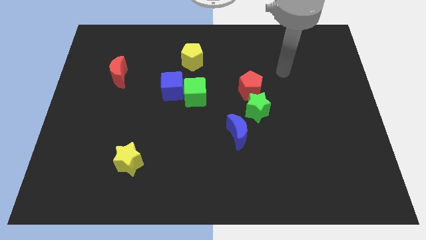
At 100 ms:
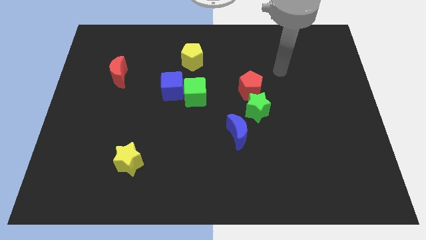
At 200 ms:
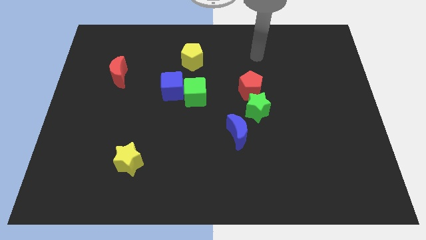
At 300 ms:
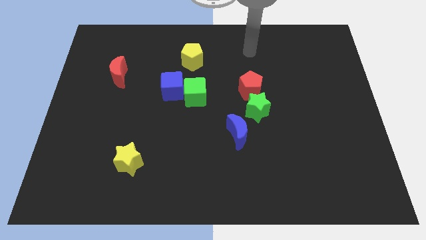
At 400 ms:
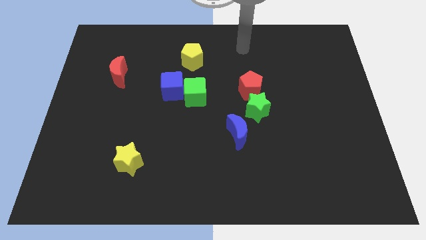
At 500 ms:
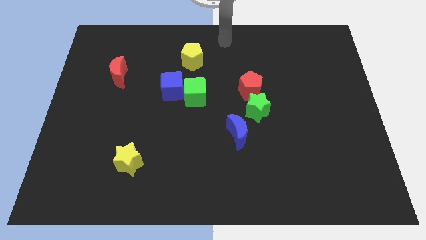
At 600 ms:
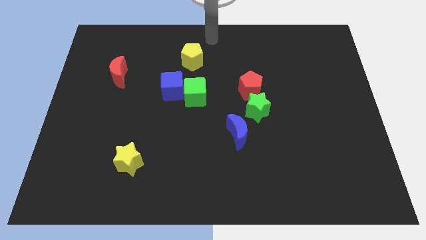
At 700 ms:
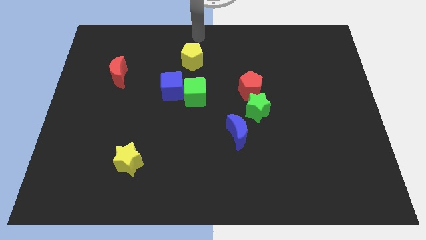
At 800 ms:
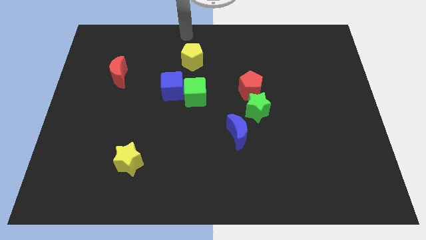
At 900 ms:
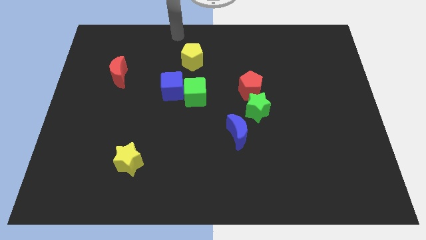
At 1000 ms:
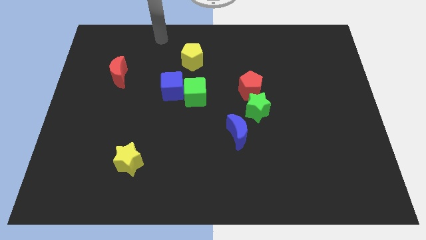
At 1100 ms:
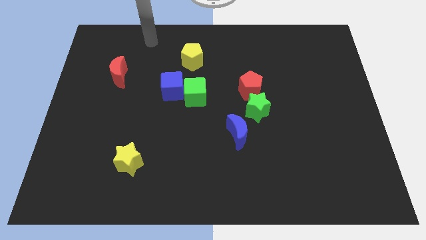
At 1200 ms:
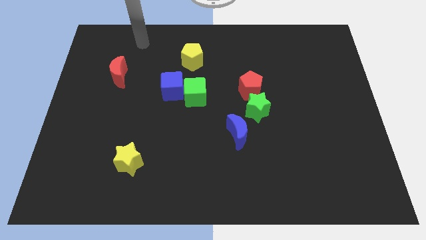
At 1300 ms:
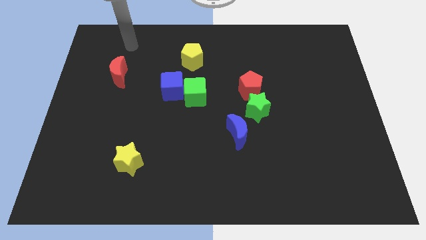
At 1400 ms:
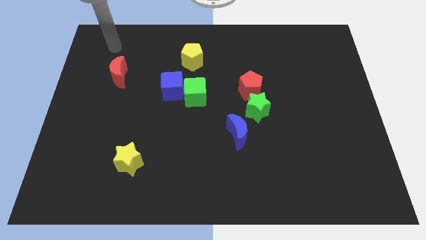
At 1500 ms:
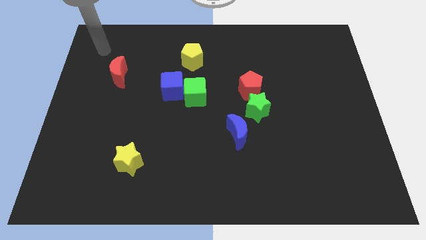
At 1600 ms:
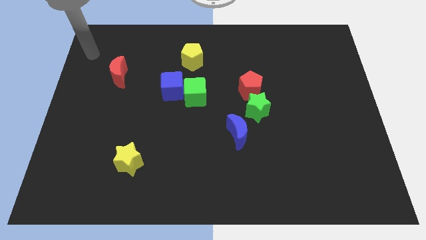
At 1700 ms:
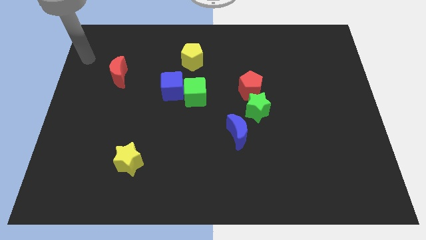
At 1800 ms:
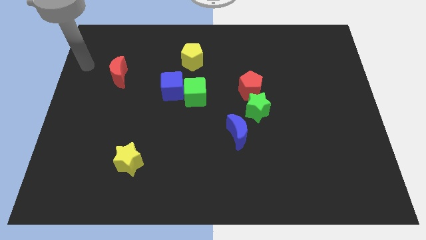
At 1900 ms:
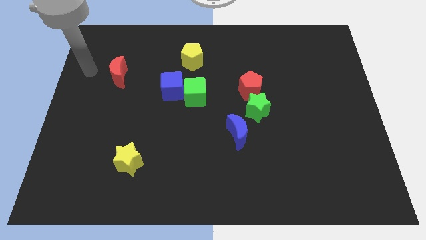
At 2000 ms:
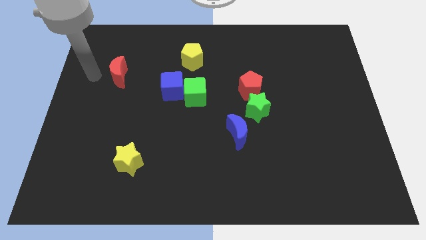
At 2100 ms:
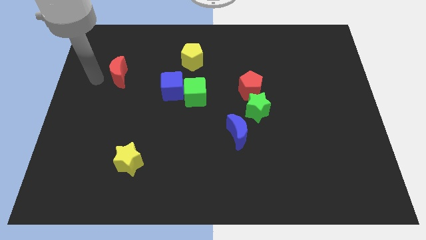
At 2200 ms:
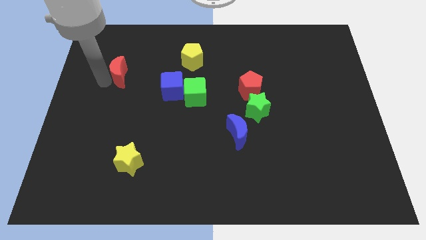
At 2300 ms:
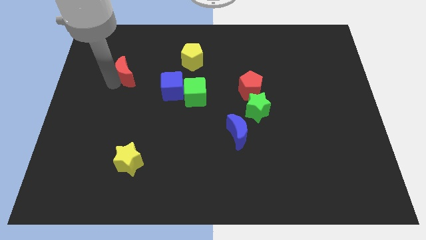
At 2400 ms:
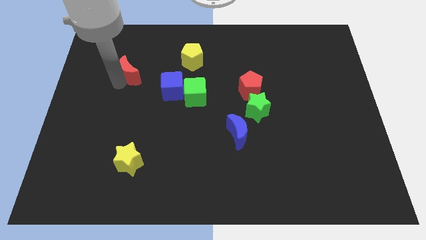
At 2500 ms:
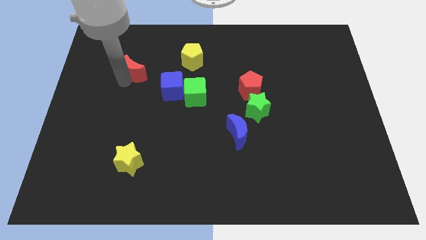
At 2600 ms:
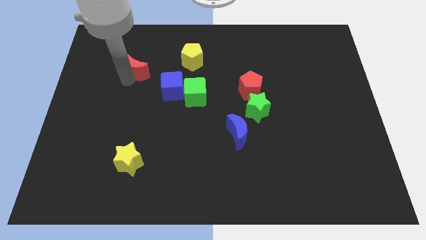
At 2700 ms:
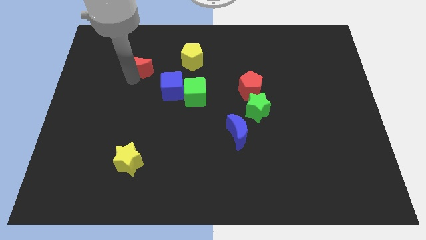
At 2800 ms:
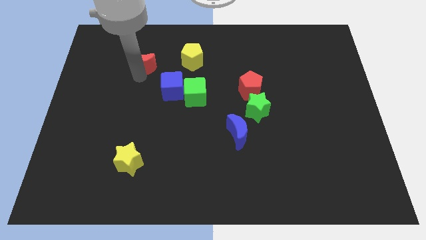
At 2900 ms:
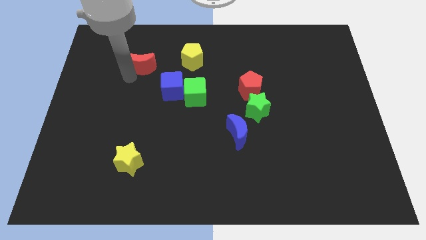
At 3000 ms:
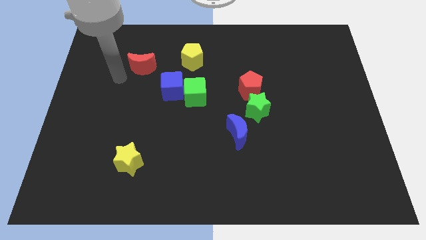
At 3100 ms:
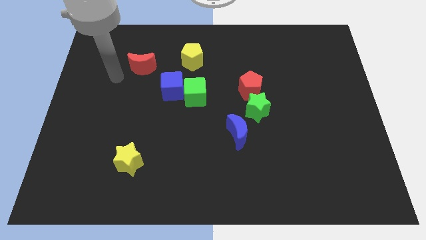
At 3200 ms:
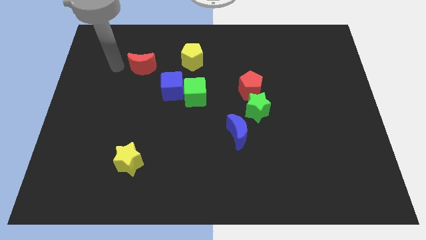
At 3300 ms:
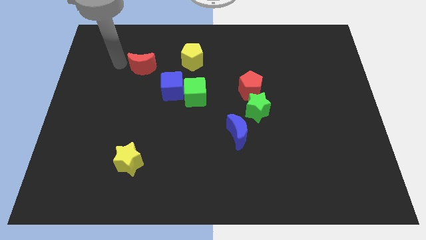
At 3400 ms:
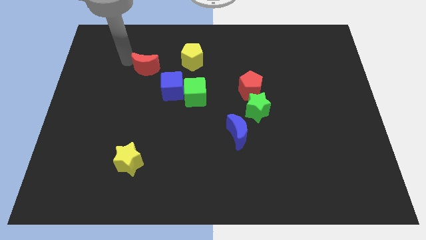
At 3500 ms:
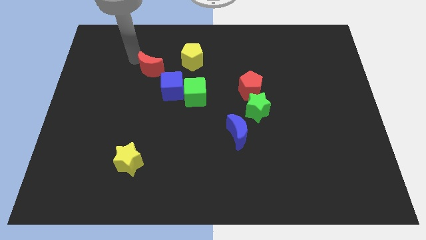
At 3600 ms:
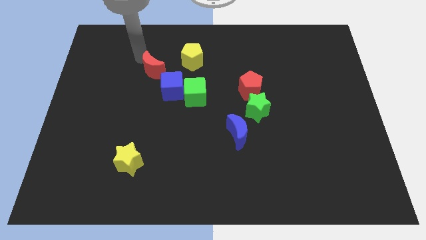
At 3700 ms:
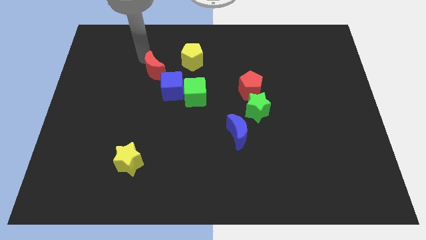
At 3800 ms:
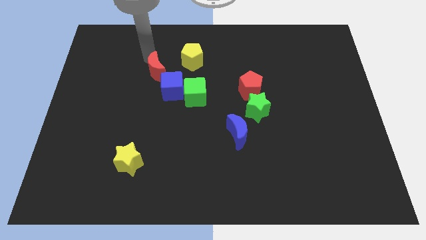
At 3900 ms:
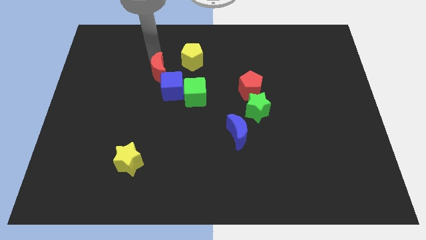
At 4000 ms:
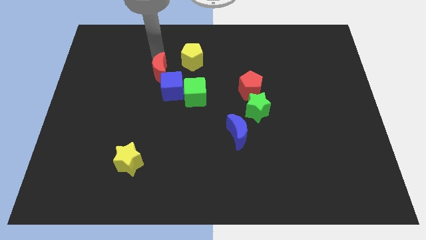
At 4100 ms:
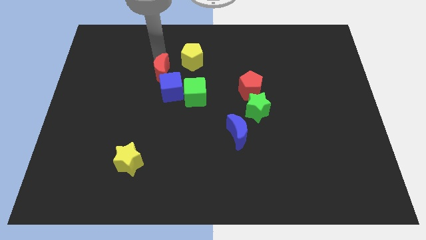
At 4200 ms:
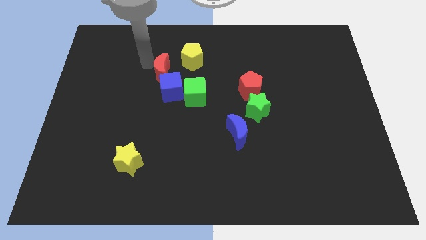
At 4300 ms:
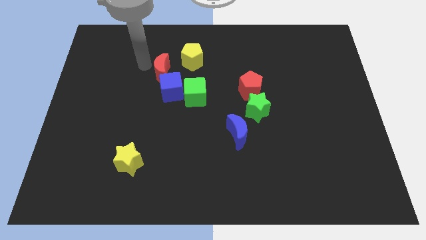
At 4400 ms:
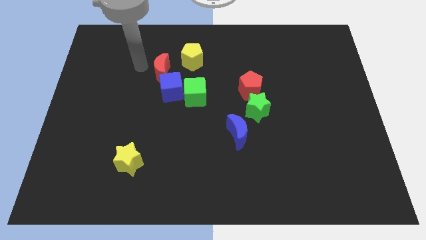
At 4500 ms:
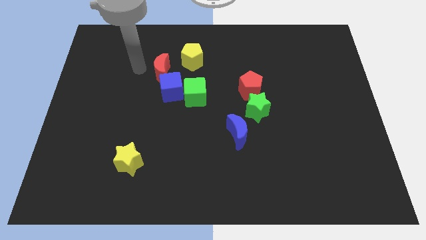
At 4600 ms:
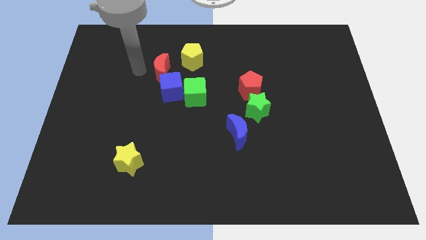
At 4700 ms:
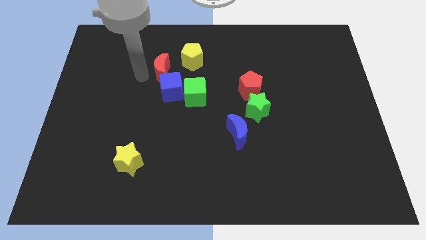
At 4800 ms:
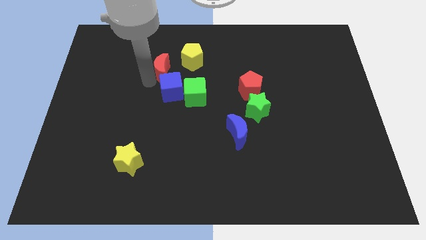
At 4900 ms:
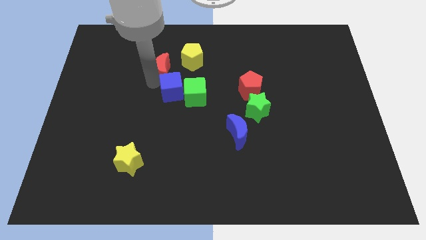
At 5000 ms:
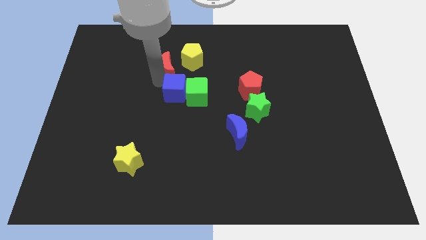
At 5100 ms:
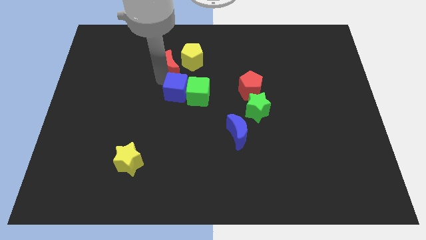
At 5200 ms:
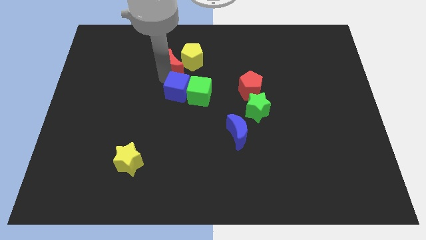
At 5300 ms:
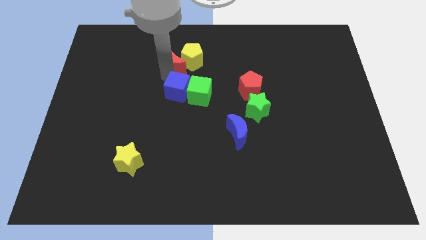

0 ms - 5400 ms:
put the red moon towards the yellow pentagon

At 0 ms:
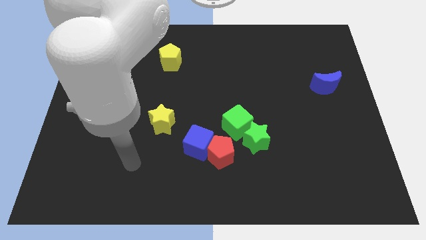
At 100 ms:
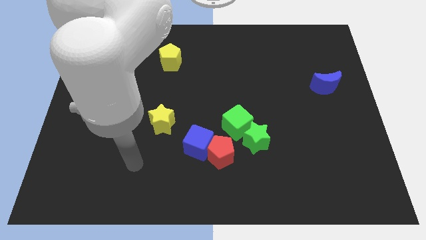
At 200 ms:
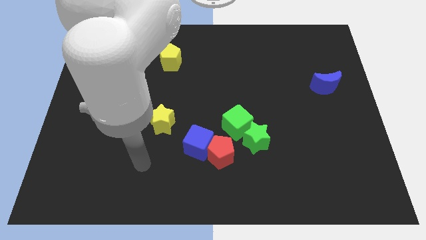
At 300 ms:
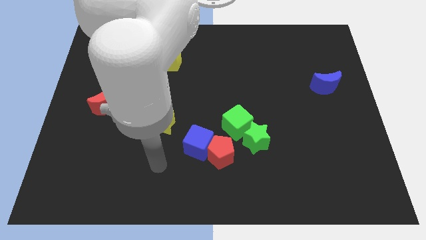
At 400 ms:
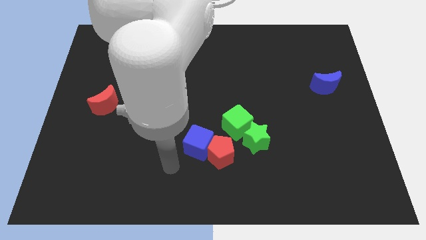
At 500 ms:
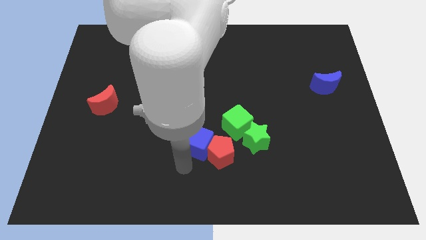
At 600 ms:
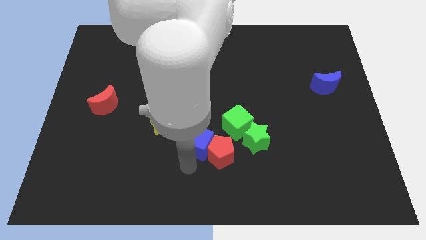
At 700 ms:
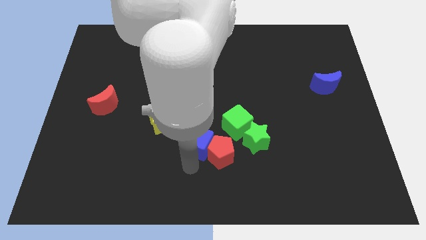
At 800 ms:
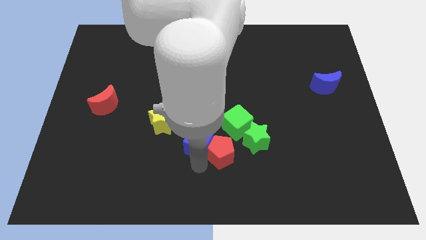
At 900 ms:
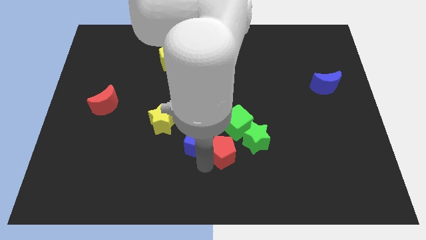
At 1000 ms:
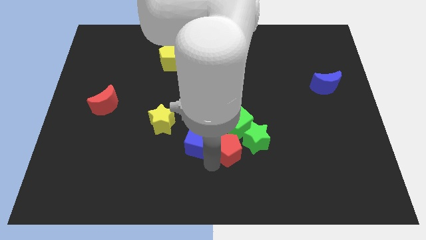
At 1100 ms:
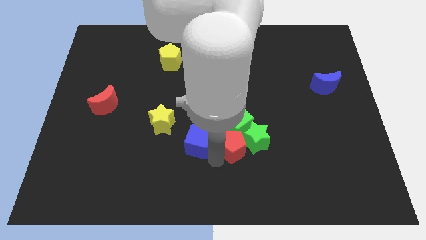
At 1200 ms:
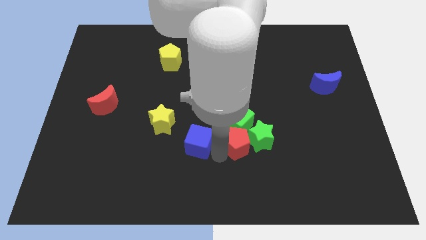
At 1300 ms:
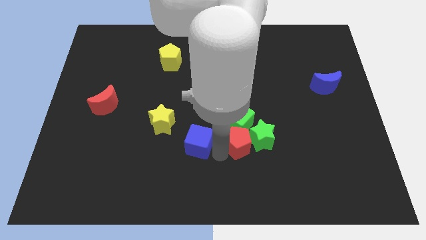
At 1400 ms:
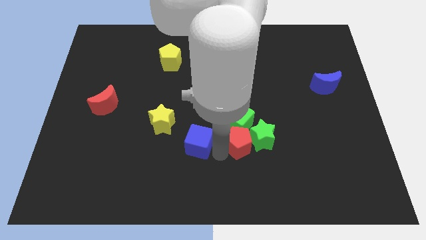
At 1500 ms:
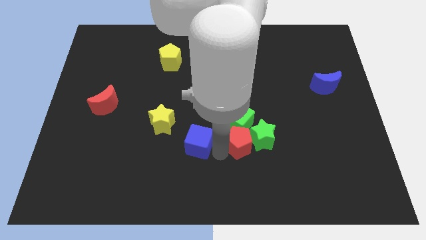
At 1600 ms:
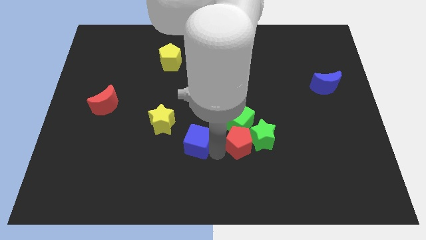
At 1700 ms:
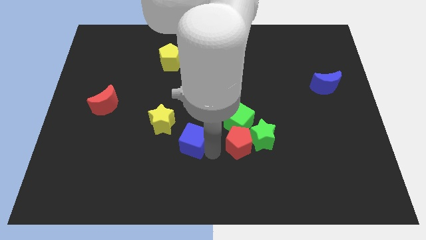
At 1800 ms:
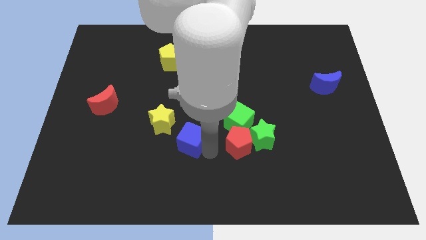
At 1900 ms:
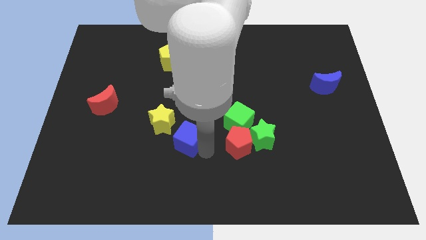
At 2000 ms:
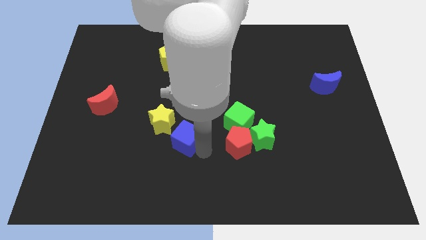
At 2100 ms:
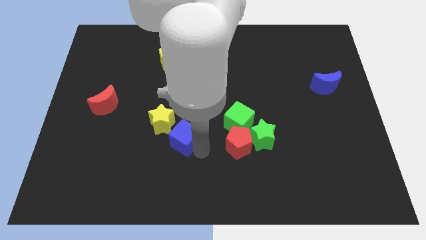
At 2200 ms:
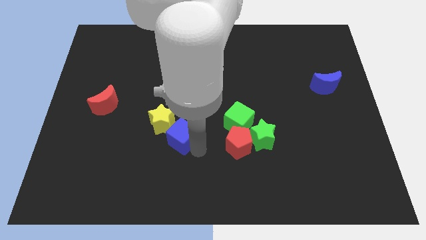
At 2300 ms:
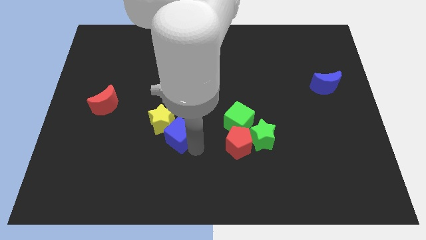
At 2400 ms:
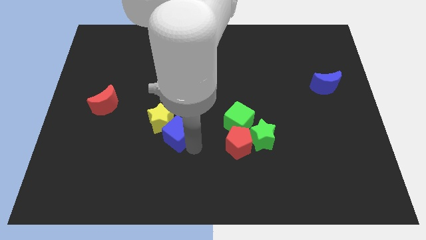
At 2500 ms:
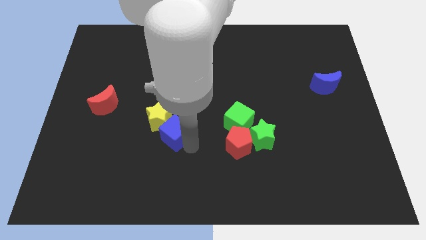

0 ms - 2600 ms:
slide the blue cube next to the yellow star

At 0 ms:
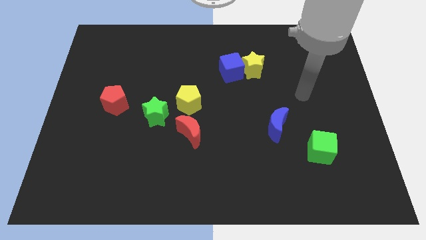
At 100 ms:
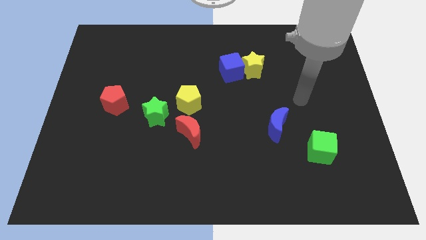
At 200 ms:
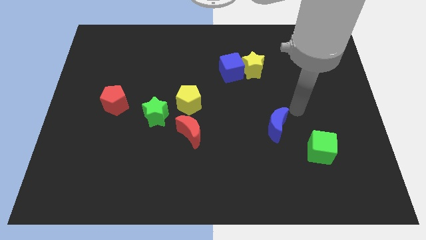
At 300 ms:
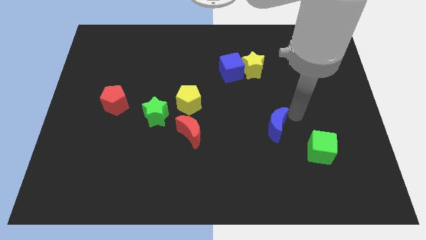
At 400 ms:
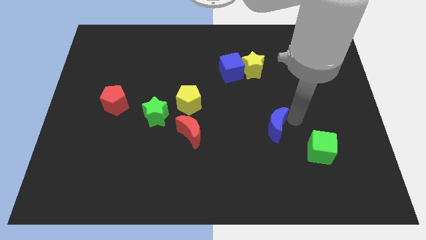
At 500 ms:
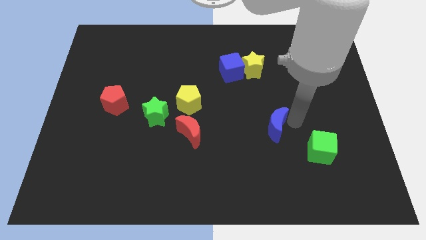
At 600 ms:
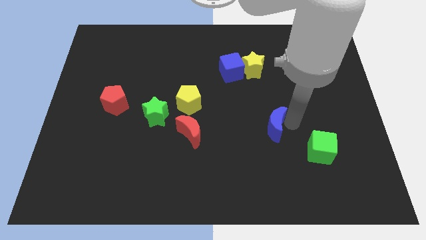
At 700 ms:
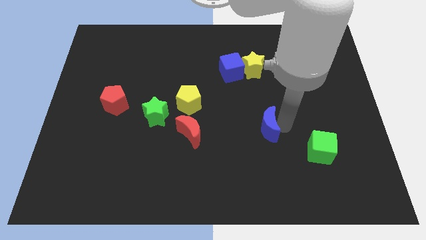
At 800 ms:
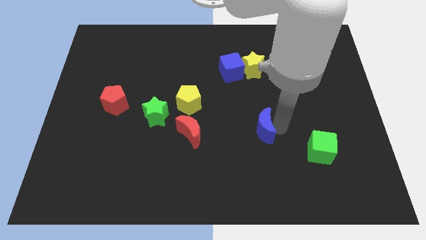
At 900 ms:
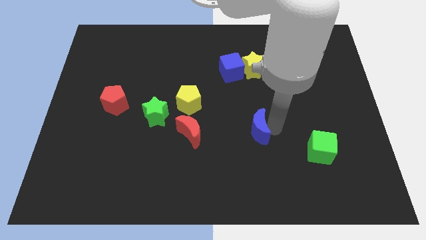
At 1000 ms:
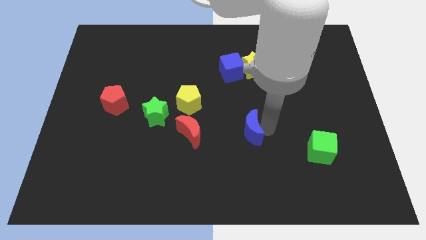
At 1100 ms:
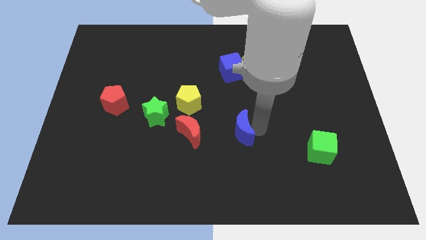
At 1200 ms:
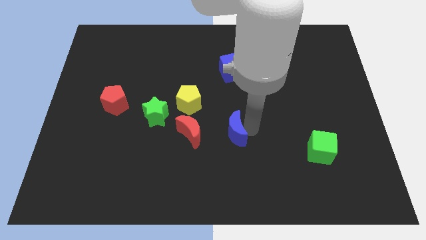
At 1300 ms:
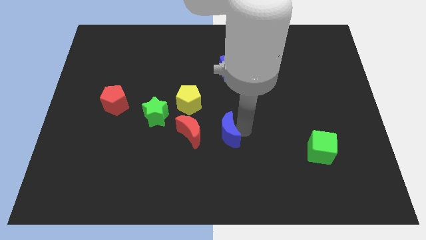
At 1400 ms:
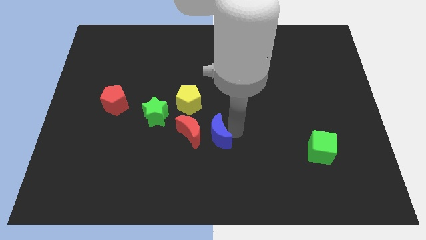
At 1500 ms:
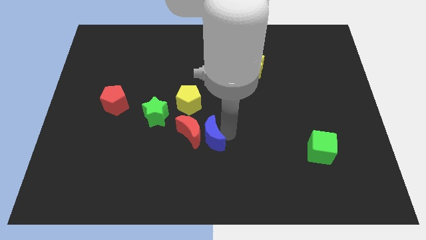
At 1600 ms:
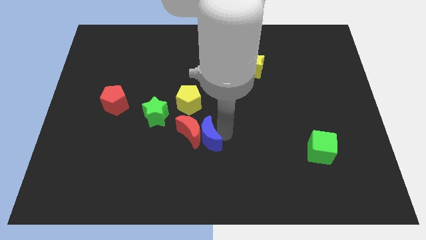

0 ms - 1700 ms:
push the blue moon towards the red moon
